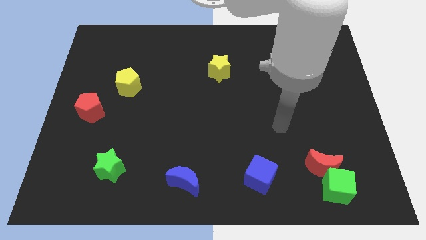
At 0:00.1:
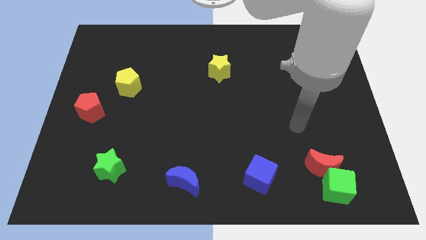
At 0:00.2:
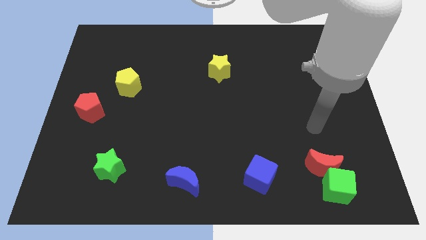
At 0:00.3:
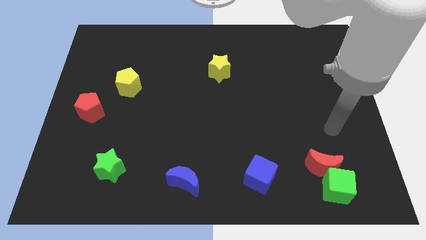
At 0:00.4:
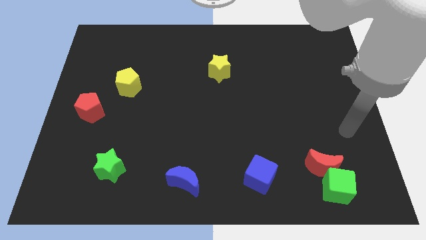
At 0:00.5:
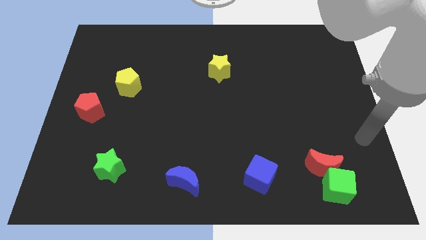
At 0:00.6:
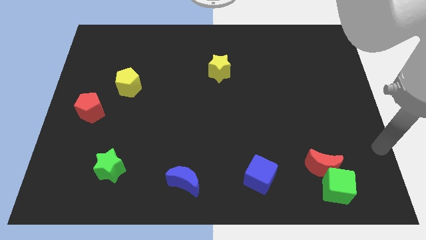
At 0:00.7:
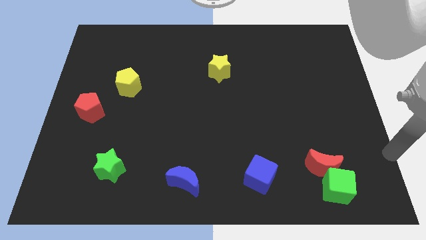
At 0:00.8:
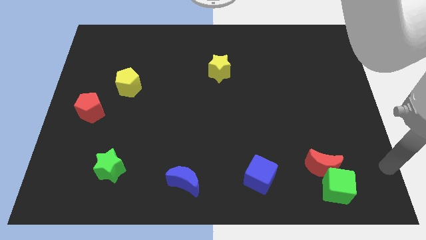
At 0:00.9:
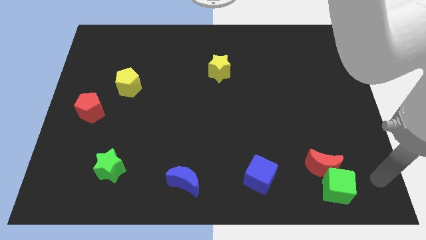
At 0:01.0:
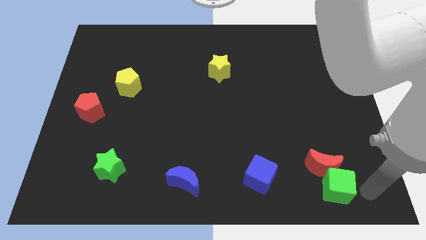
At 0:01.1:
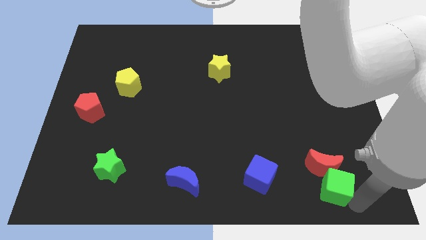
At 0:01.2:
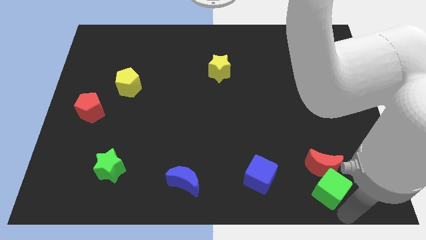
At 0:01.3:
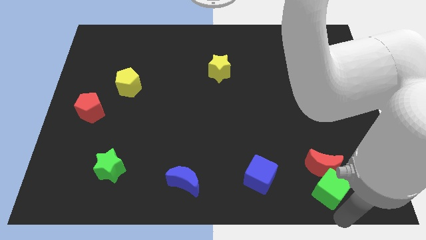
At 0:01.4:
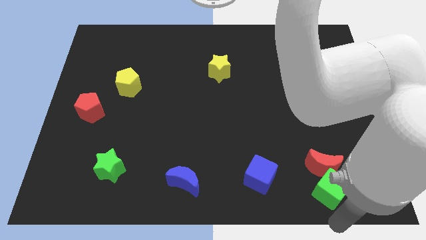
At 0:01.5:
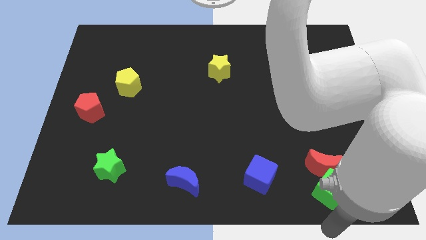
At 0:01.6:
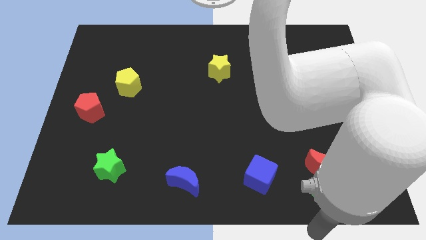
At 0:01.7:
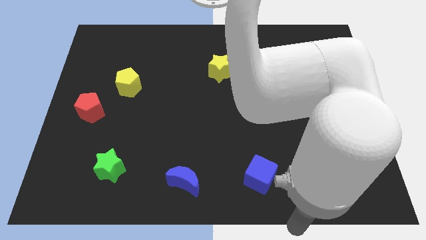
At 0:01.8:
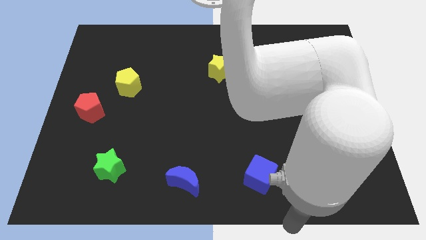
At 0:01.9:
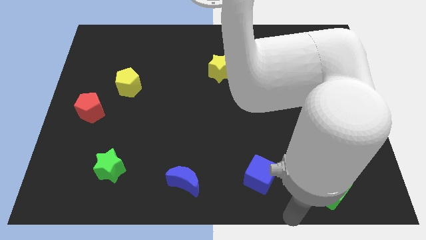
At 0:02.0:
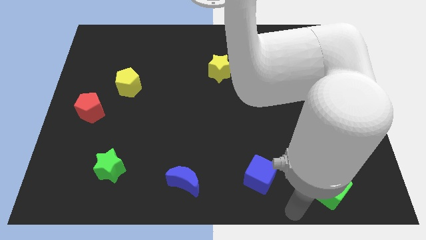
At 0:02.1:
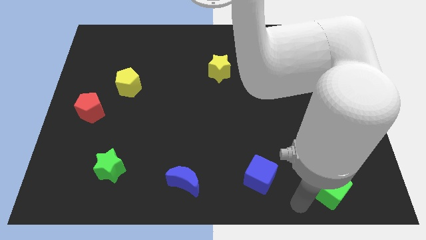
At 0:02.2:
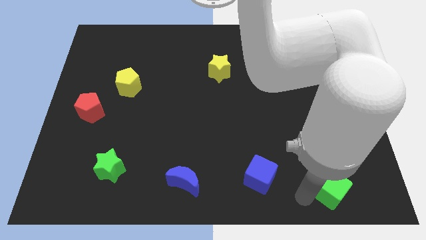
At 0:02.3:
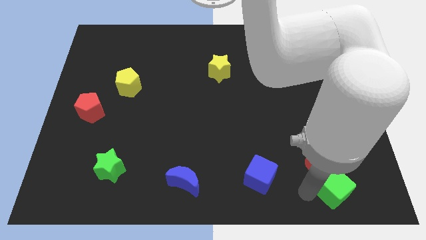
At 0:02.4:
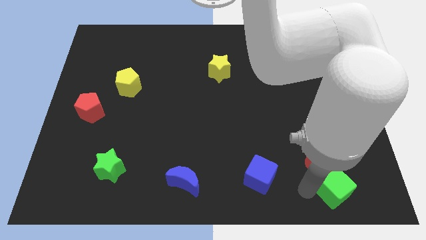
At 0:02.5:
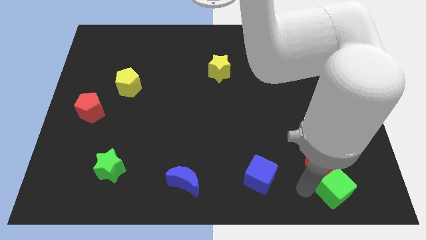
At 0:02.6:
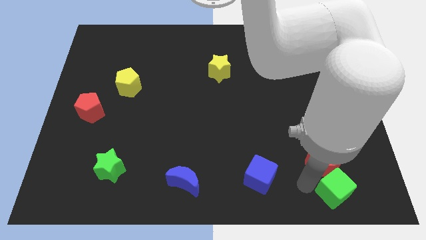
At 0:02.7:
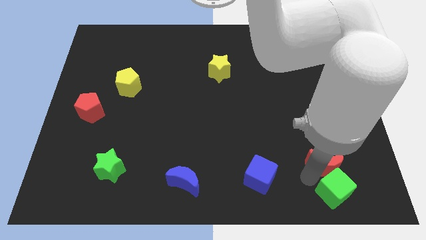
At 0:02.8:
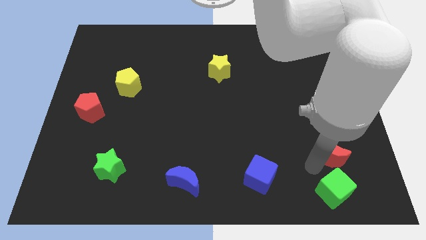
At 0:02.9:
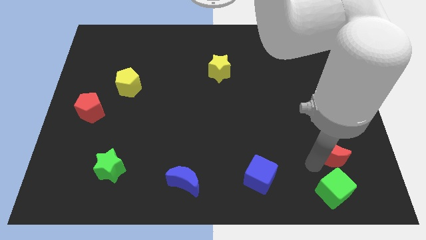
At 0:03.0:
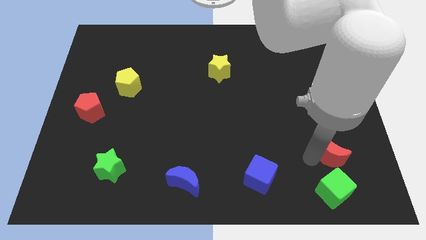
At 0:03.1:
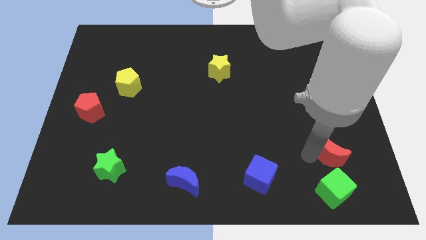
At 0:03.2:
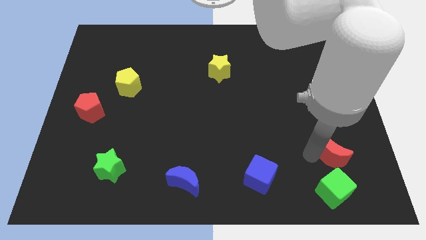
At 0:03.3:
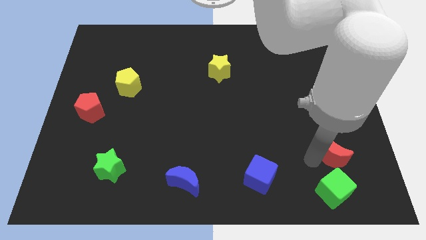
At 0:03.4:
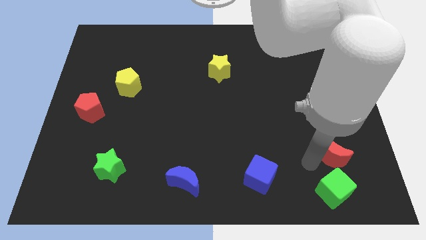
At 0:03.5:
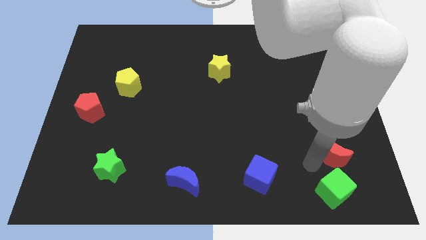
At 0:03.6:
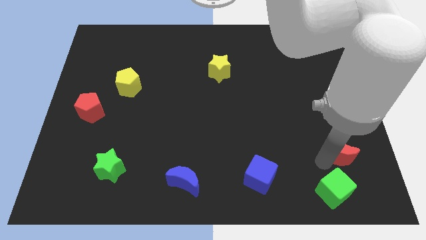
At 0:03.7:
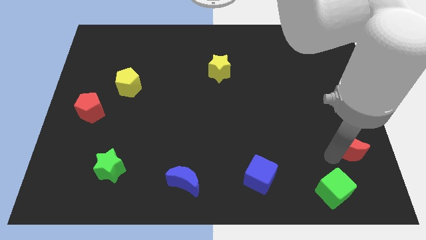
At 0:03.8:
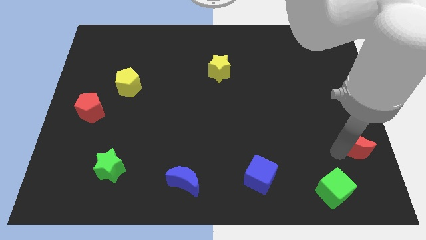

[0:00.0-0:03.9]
separate the red crescent and green cube

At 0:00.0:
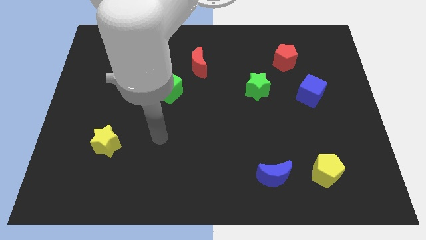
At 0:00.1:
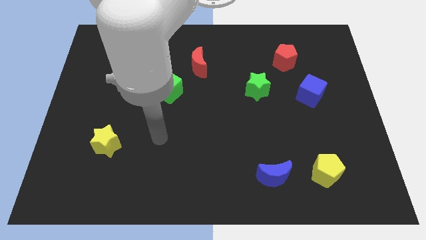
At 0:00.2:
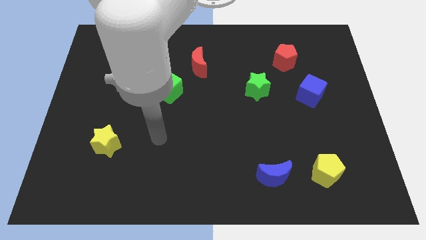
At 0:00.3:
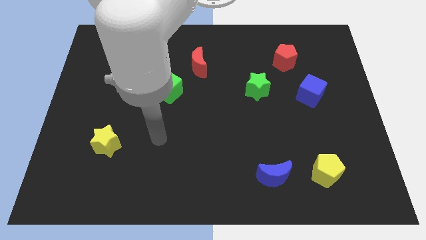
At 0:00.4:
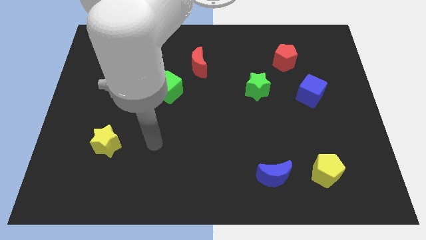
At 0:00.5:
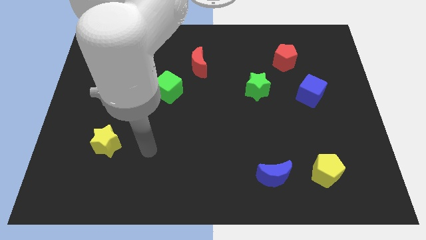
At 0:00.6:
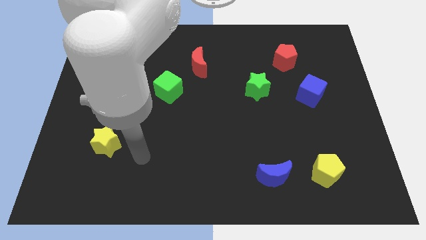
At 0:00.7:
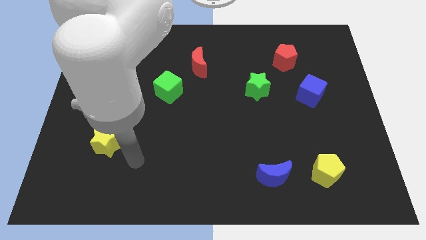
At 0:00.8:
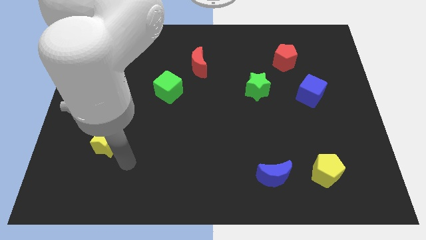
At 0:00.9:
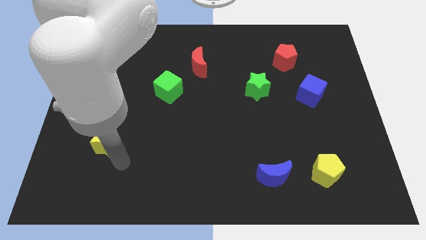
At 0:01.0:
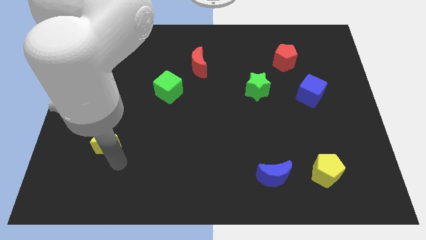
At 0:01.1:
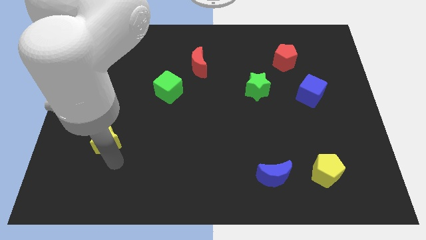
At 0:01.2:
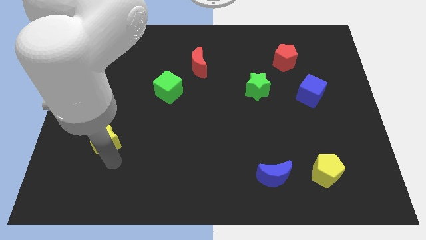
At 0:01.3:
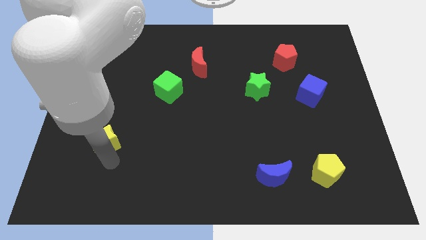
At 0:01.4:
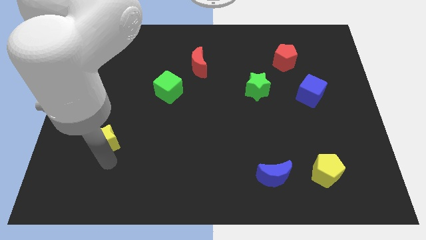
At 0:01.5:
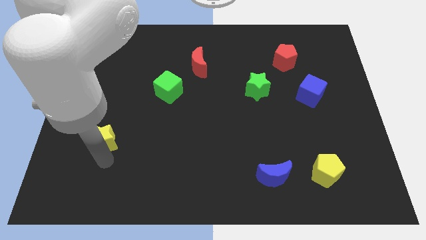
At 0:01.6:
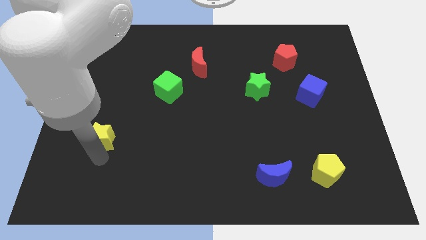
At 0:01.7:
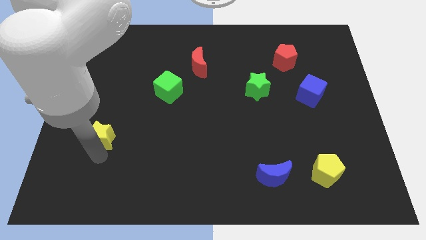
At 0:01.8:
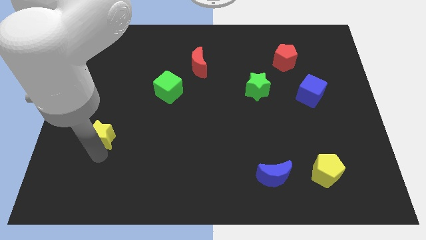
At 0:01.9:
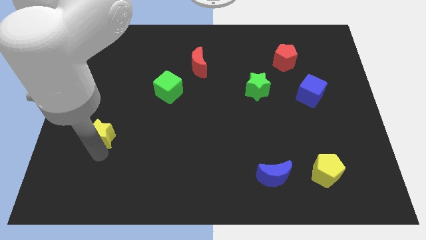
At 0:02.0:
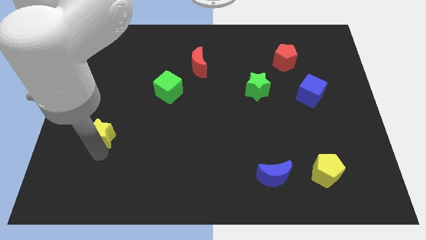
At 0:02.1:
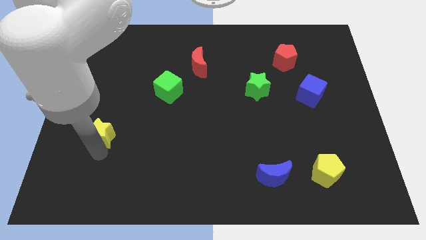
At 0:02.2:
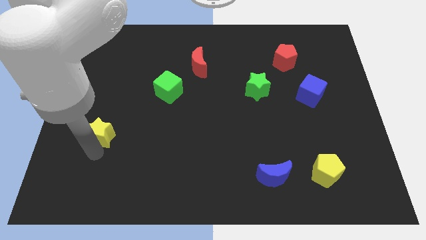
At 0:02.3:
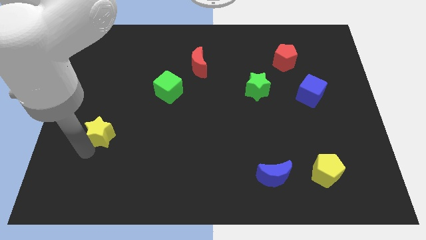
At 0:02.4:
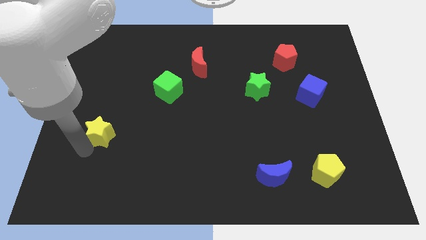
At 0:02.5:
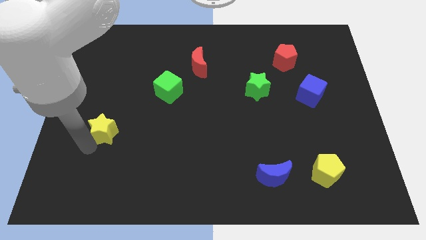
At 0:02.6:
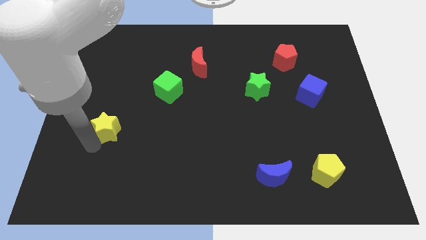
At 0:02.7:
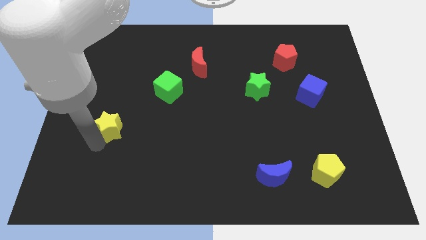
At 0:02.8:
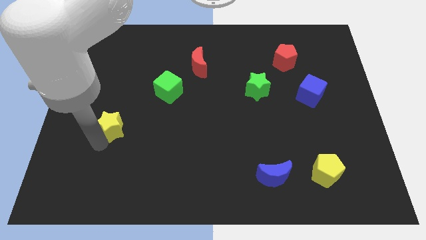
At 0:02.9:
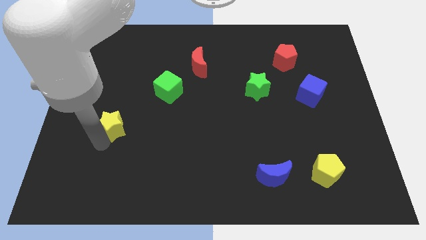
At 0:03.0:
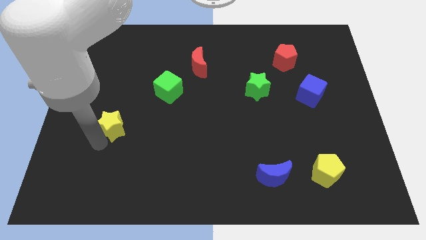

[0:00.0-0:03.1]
move the yellow star slightly towards the green cube

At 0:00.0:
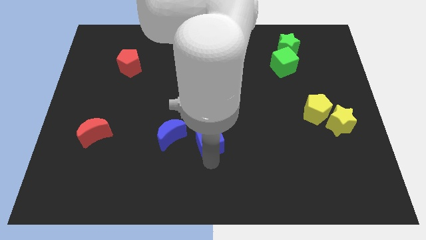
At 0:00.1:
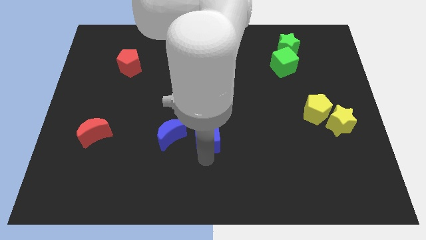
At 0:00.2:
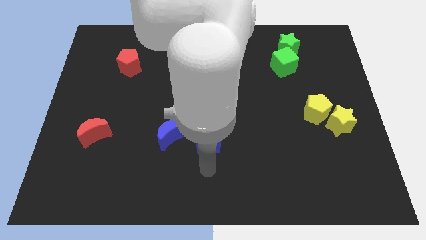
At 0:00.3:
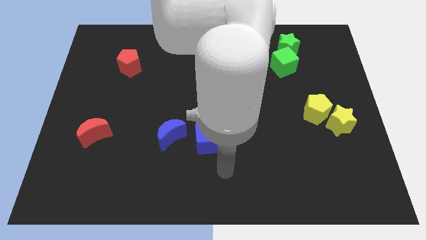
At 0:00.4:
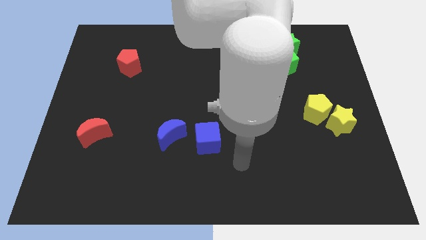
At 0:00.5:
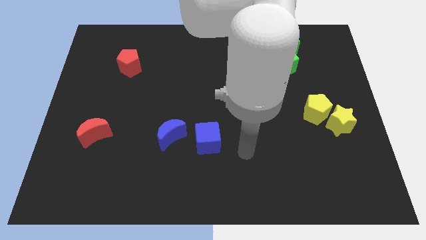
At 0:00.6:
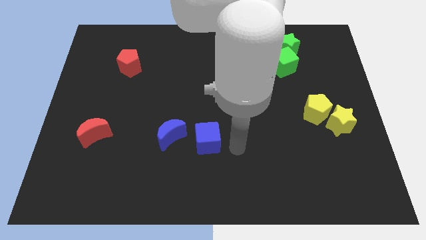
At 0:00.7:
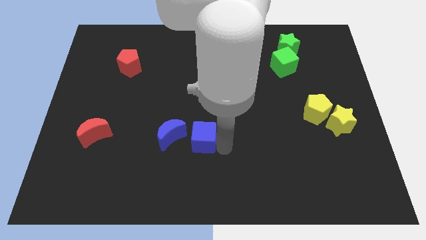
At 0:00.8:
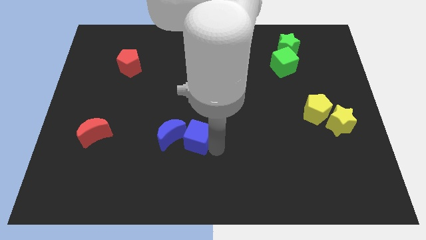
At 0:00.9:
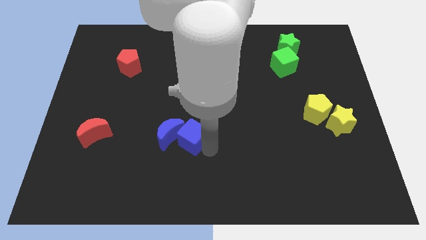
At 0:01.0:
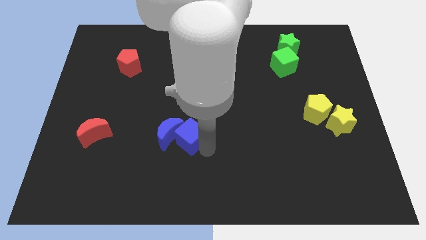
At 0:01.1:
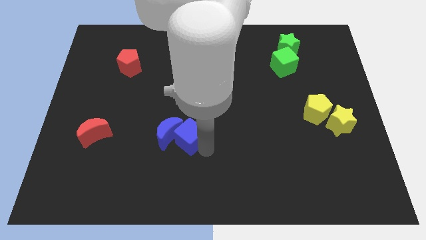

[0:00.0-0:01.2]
slightly push the blue cube into the blue moon

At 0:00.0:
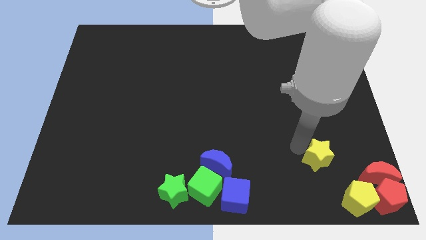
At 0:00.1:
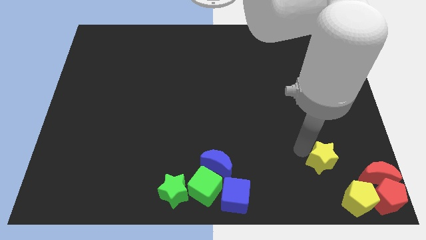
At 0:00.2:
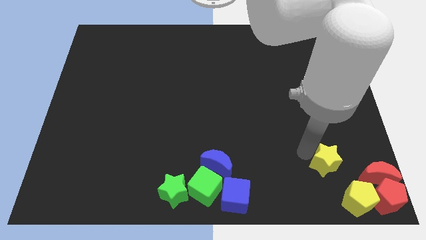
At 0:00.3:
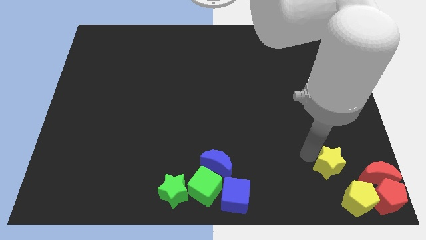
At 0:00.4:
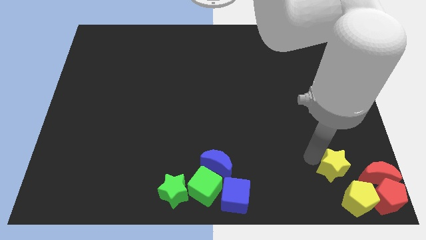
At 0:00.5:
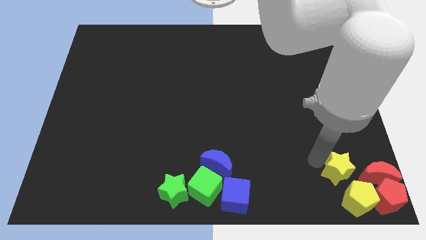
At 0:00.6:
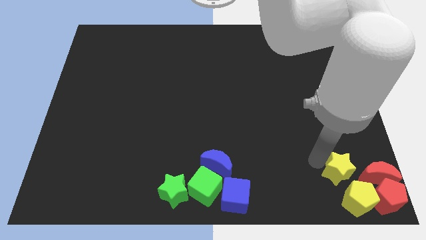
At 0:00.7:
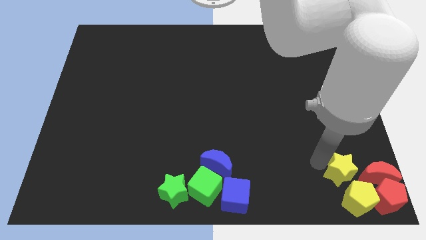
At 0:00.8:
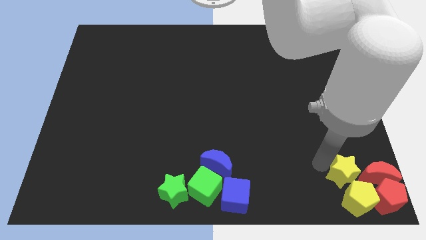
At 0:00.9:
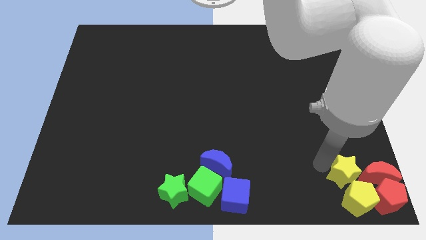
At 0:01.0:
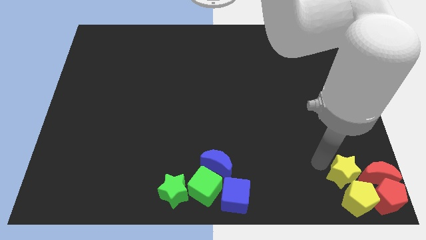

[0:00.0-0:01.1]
push the yellow star towards the top of yellow pentagon
